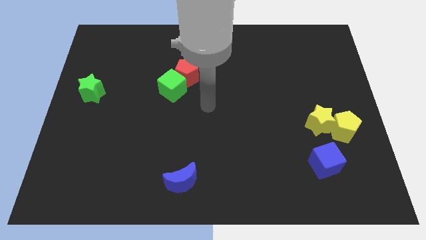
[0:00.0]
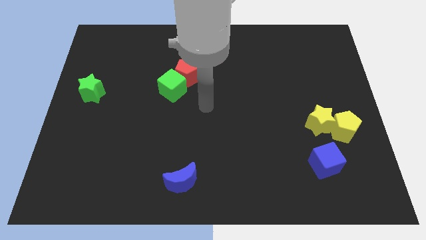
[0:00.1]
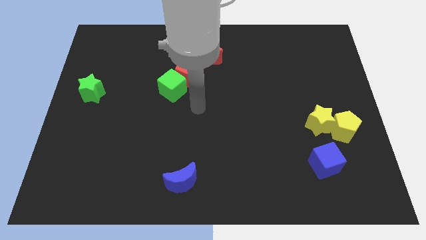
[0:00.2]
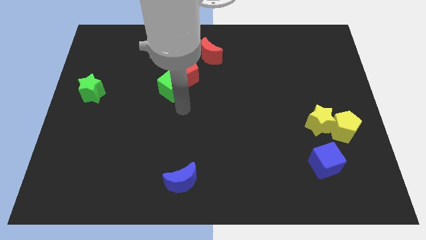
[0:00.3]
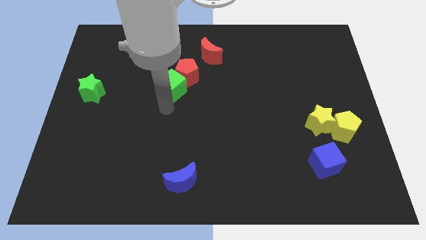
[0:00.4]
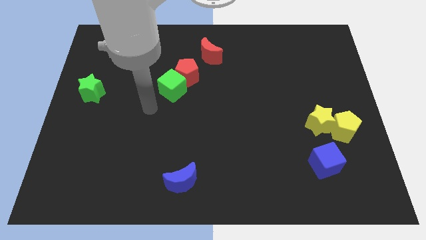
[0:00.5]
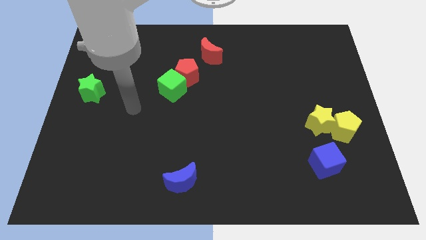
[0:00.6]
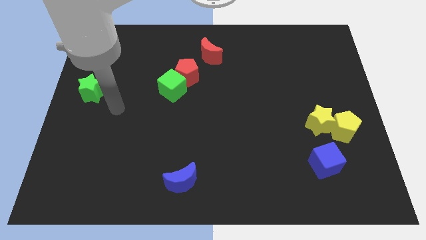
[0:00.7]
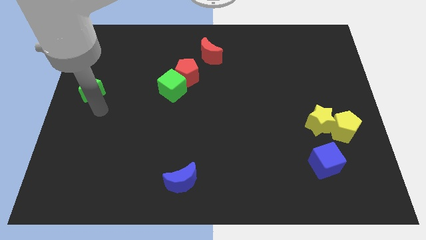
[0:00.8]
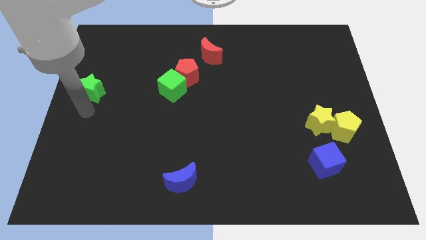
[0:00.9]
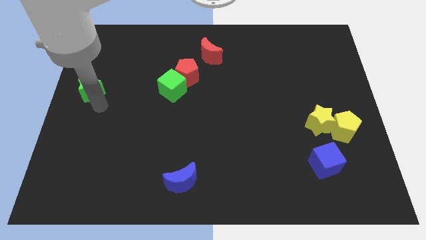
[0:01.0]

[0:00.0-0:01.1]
place your arm to the bottom of green star

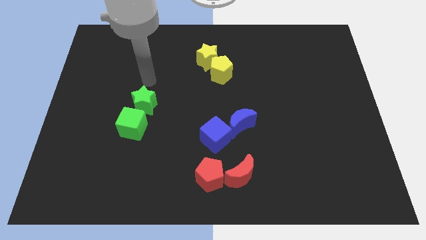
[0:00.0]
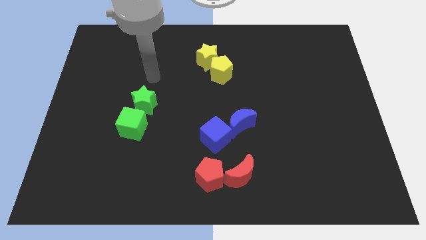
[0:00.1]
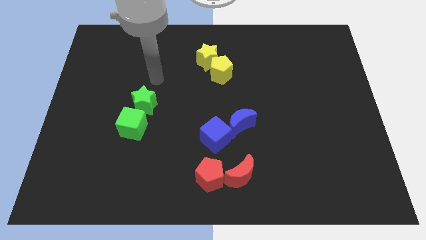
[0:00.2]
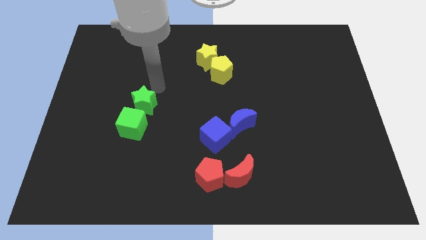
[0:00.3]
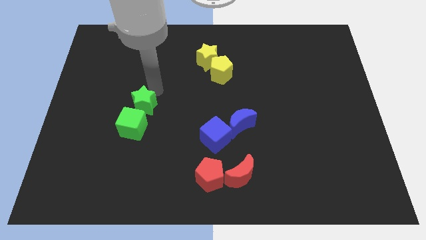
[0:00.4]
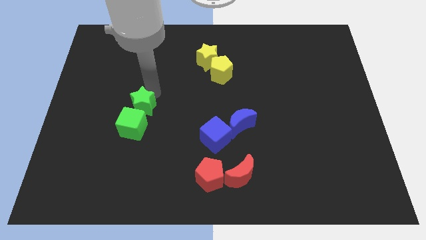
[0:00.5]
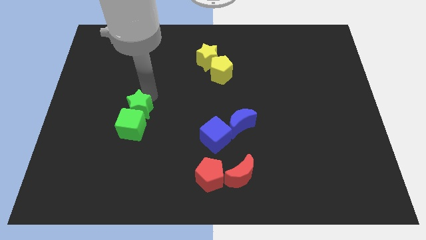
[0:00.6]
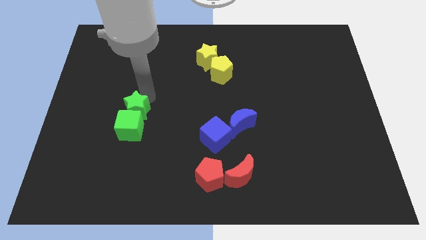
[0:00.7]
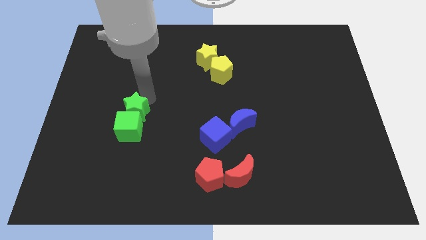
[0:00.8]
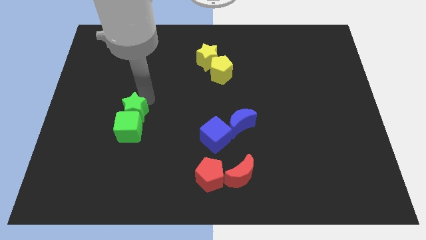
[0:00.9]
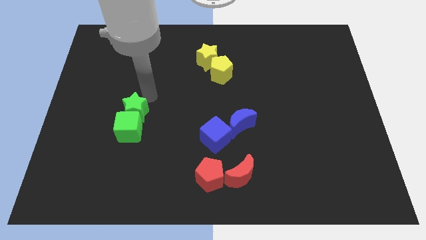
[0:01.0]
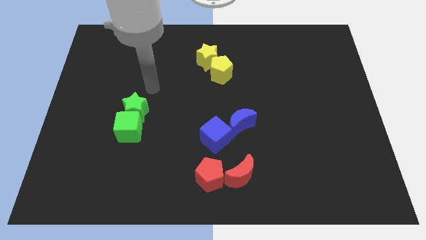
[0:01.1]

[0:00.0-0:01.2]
put the green blocks together

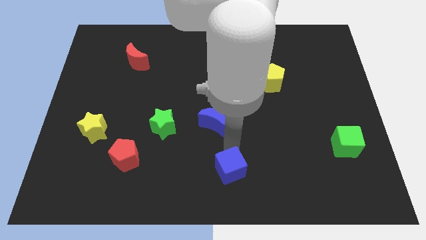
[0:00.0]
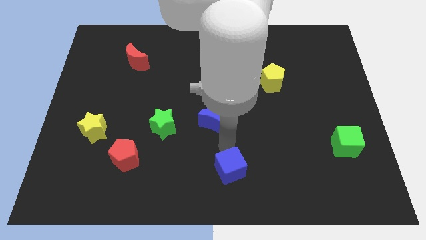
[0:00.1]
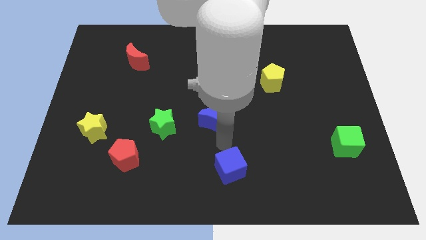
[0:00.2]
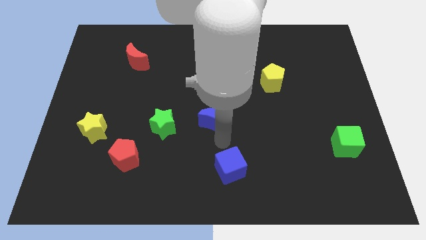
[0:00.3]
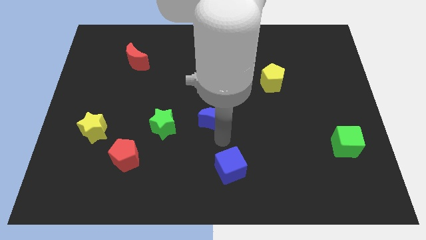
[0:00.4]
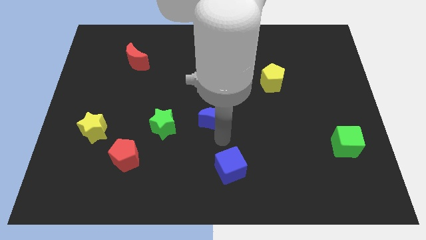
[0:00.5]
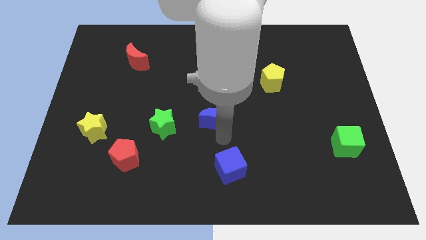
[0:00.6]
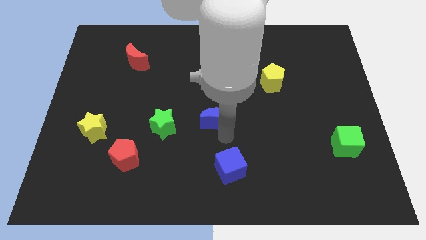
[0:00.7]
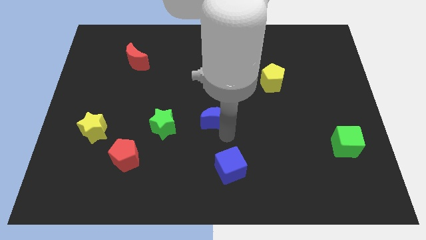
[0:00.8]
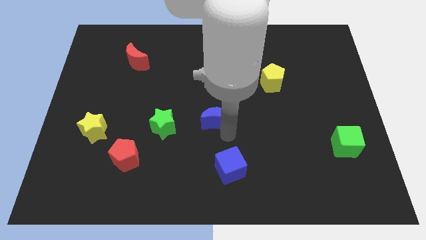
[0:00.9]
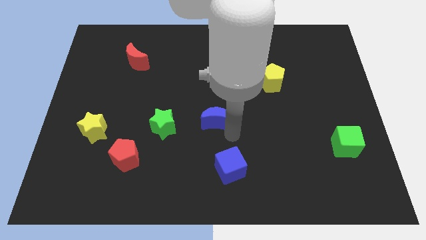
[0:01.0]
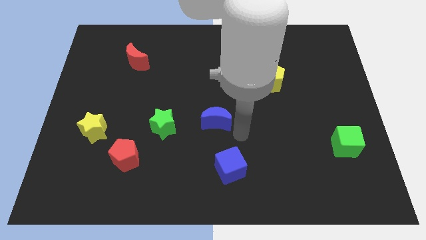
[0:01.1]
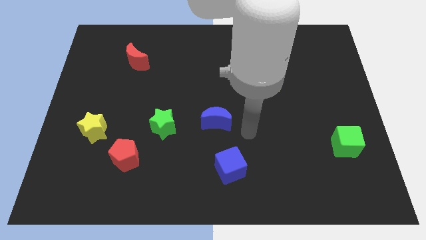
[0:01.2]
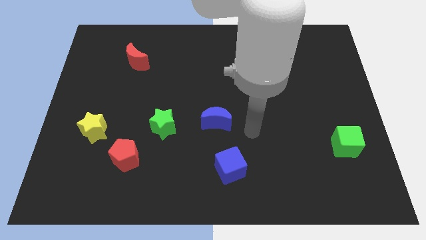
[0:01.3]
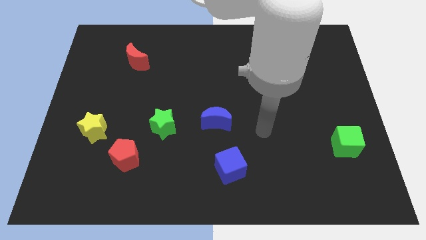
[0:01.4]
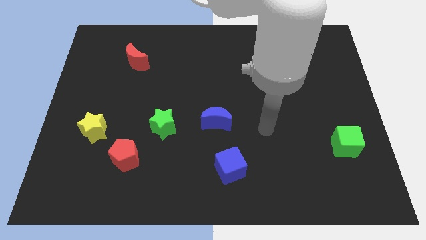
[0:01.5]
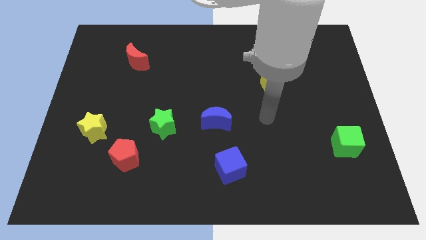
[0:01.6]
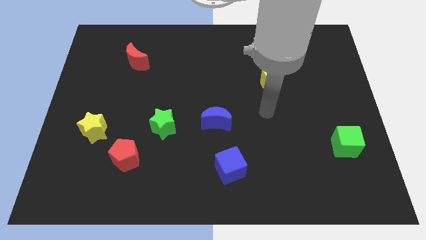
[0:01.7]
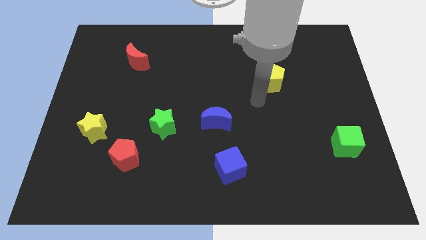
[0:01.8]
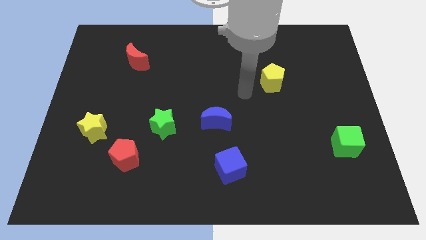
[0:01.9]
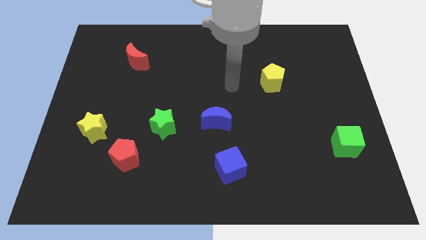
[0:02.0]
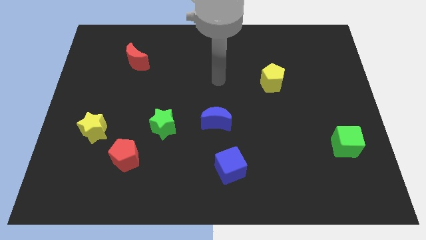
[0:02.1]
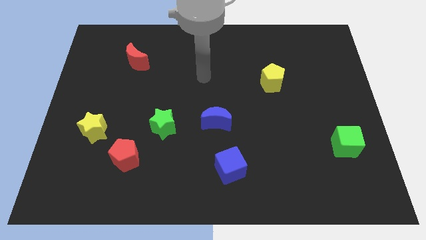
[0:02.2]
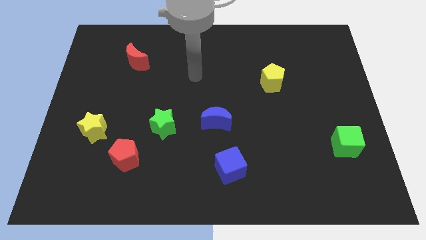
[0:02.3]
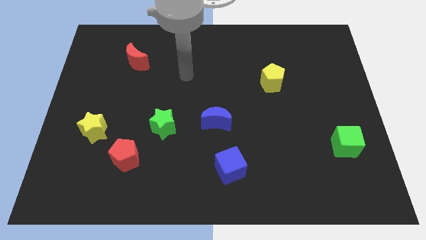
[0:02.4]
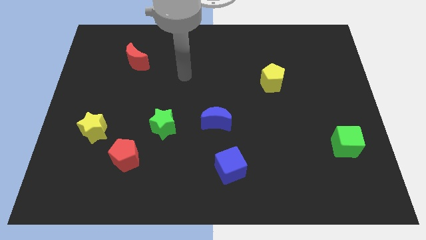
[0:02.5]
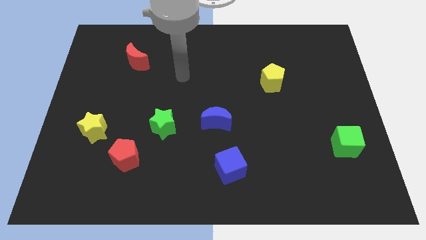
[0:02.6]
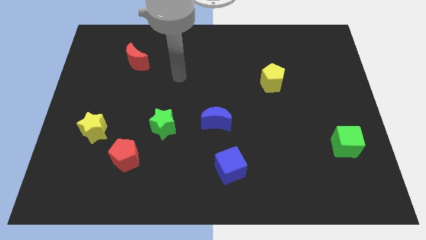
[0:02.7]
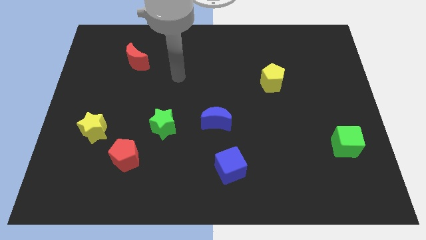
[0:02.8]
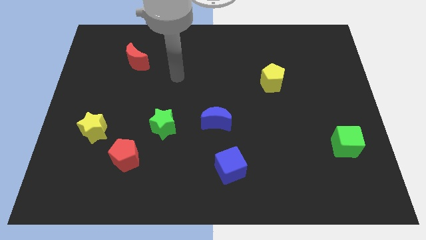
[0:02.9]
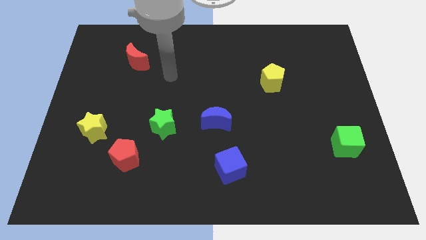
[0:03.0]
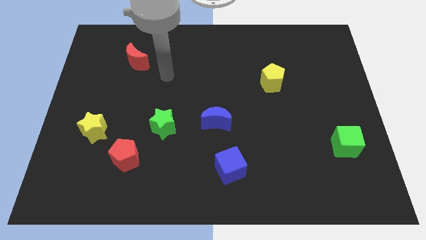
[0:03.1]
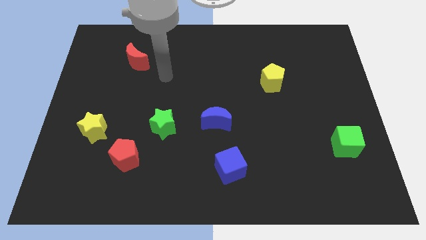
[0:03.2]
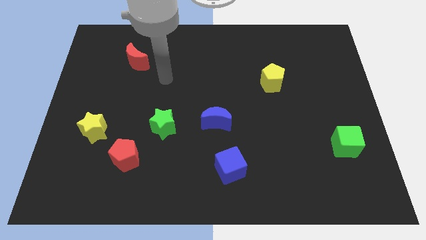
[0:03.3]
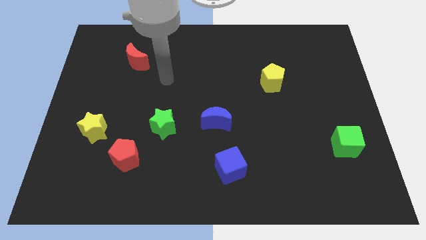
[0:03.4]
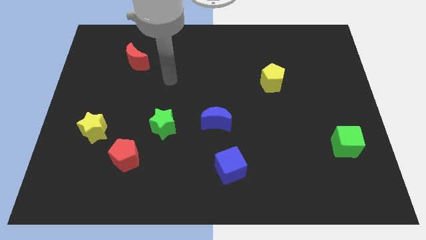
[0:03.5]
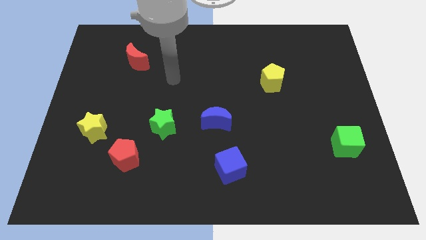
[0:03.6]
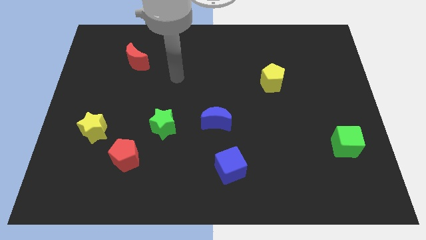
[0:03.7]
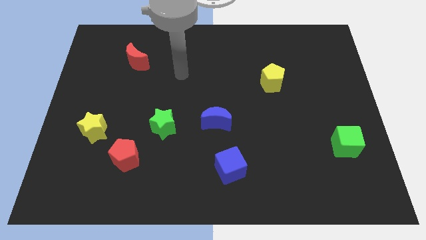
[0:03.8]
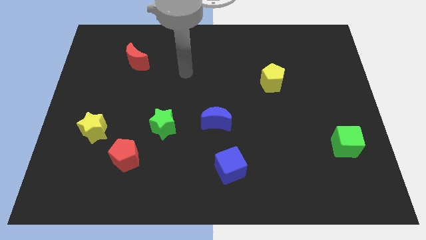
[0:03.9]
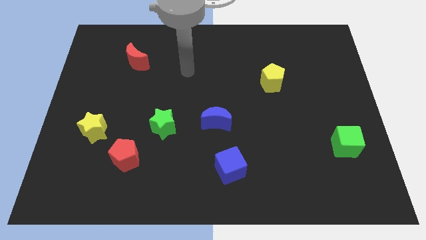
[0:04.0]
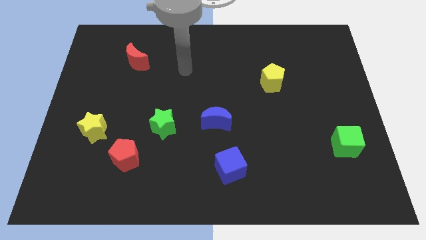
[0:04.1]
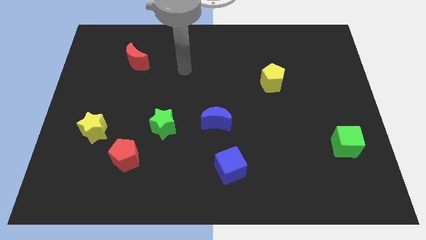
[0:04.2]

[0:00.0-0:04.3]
move your arm away from the blue cube

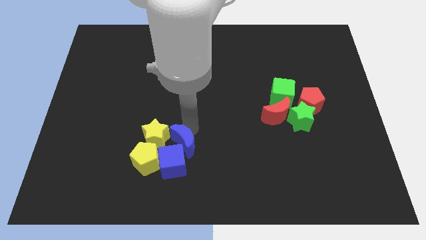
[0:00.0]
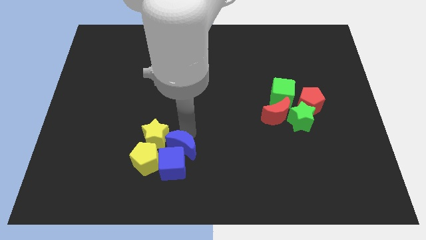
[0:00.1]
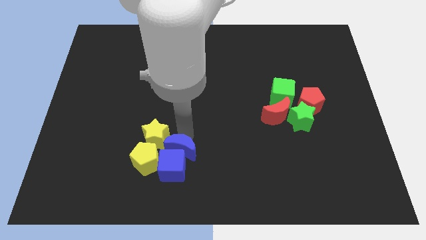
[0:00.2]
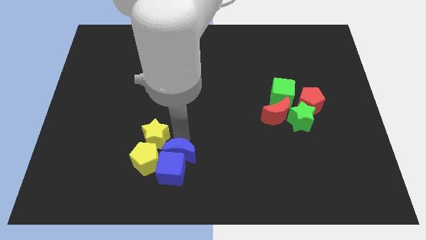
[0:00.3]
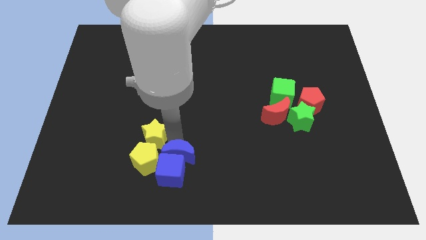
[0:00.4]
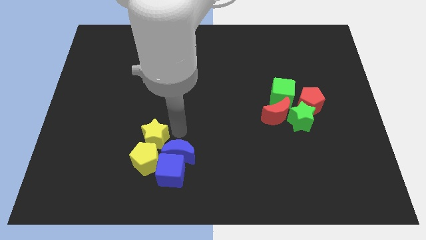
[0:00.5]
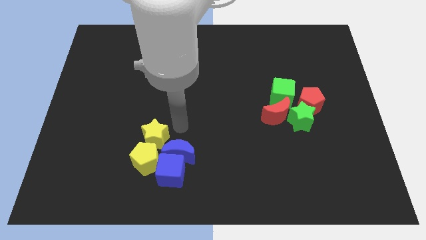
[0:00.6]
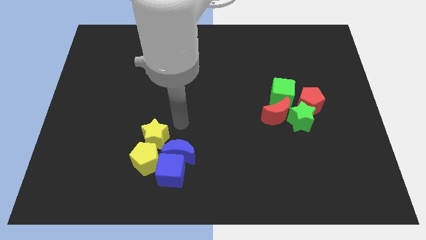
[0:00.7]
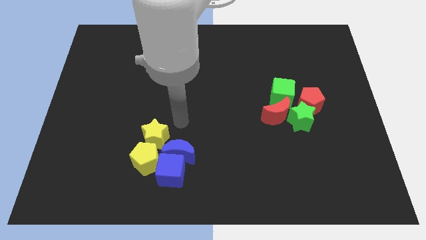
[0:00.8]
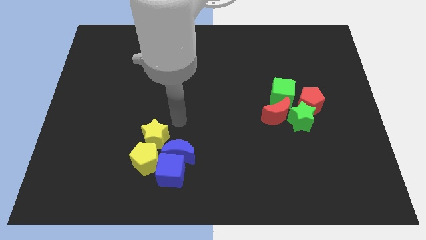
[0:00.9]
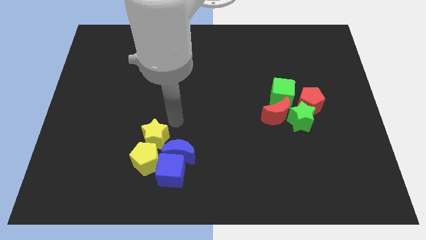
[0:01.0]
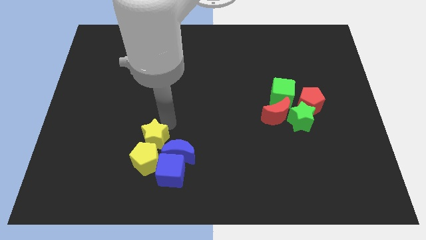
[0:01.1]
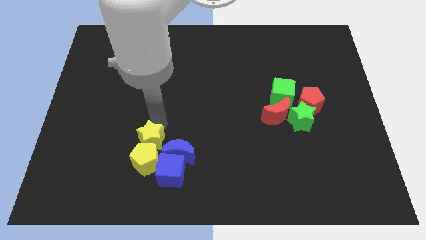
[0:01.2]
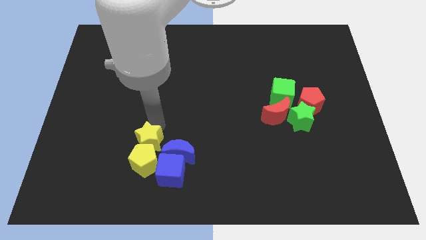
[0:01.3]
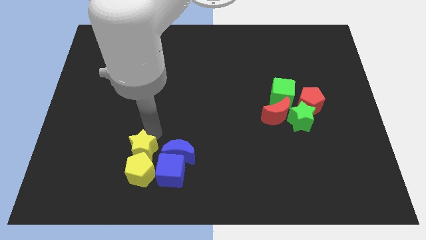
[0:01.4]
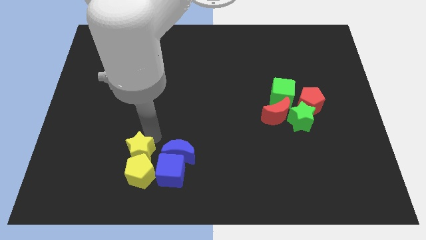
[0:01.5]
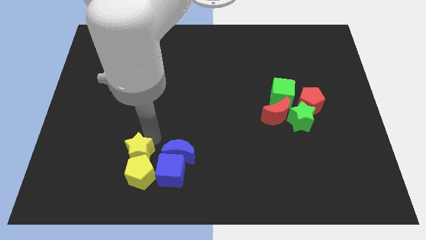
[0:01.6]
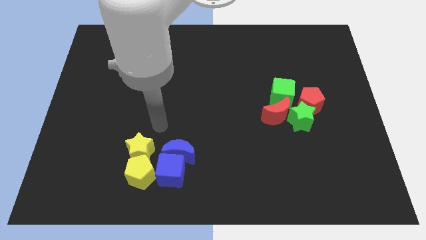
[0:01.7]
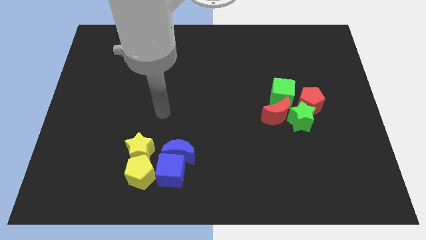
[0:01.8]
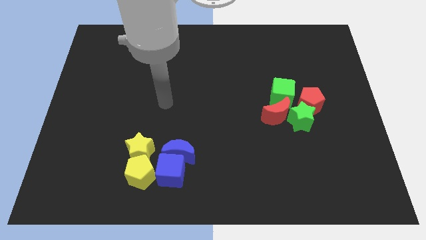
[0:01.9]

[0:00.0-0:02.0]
move the blue crescent and blue cube slightly to the down along with the yellow star and yellow pentagon

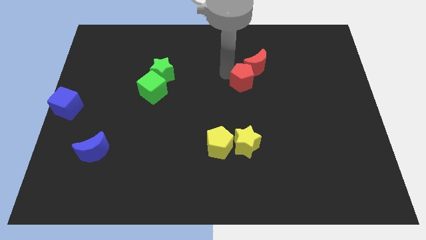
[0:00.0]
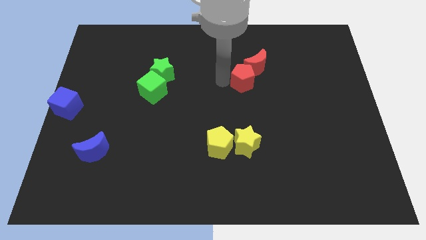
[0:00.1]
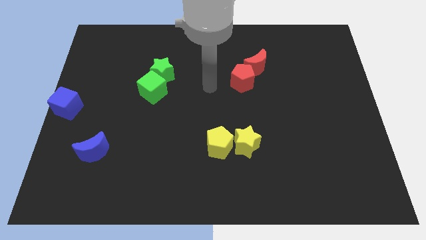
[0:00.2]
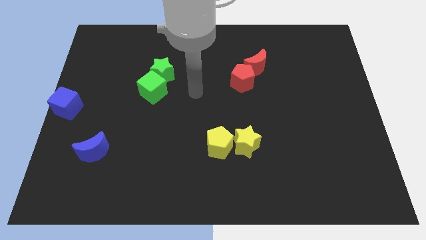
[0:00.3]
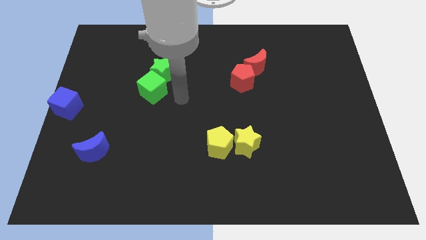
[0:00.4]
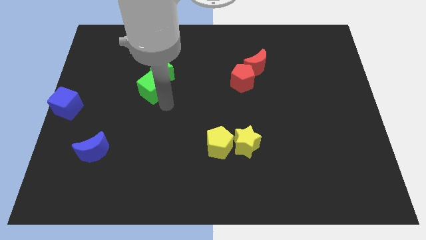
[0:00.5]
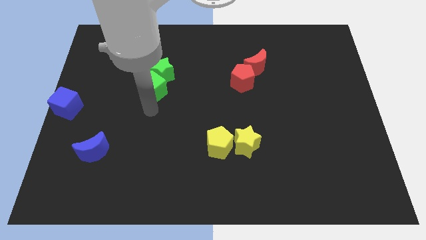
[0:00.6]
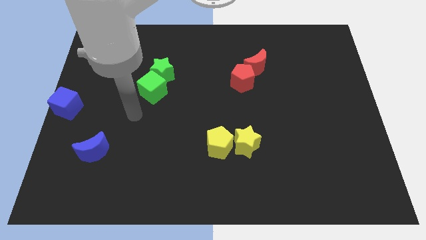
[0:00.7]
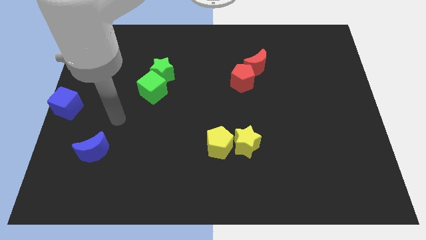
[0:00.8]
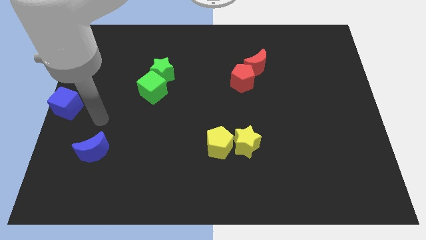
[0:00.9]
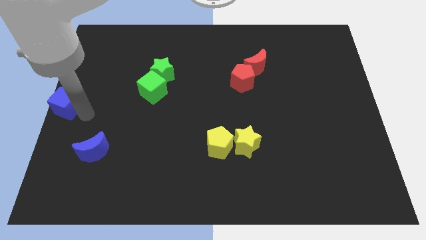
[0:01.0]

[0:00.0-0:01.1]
move your arm away from the red pentagon
